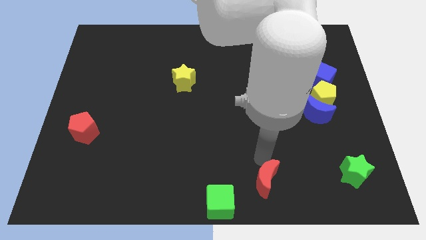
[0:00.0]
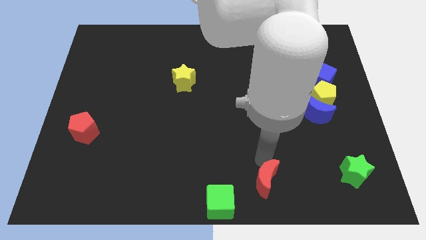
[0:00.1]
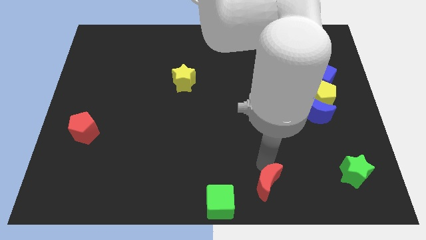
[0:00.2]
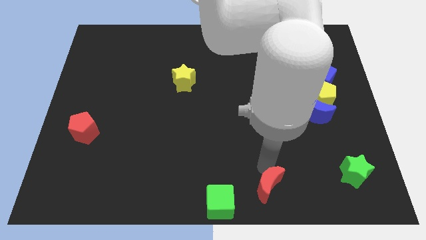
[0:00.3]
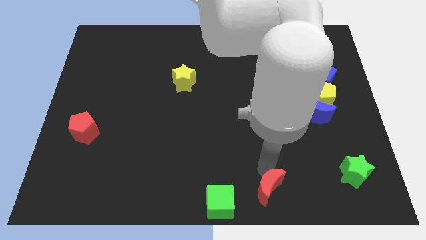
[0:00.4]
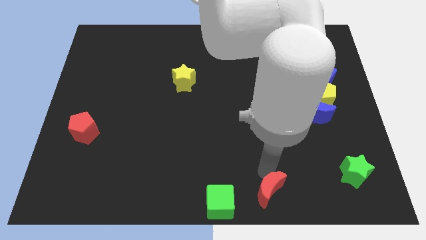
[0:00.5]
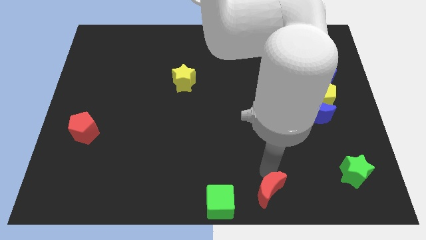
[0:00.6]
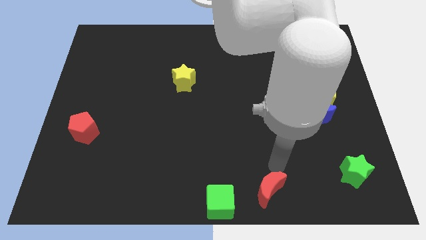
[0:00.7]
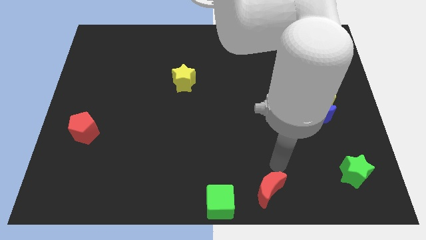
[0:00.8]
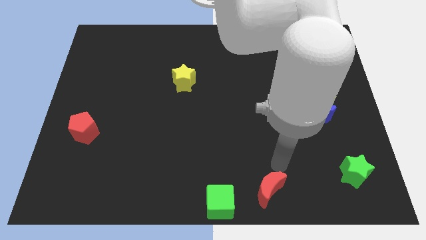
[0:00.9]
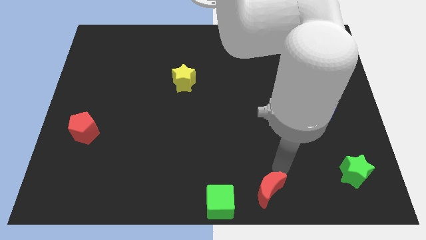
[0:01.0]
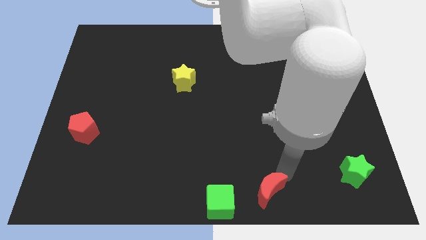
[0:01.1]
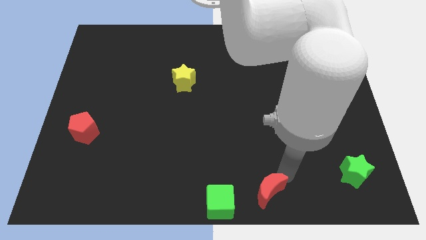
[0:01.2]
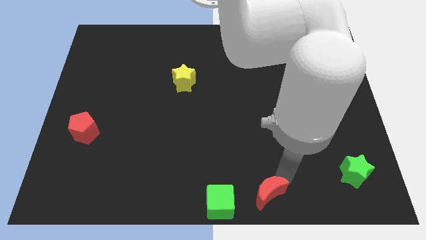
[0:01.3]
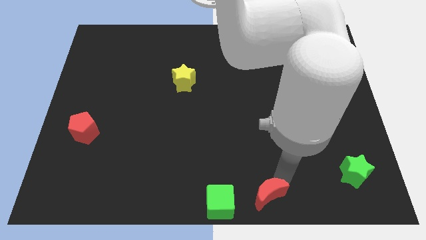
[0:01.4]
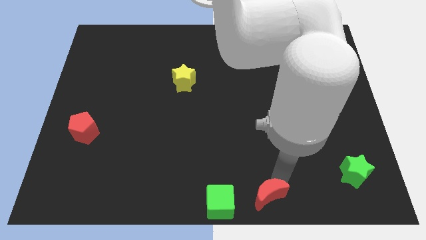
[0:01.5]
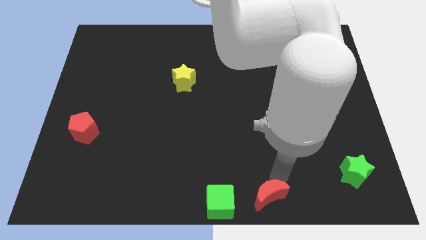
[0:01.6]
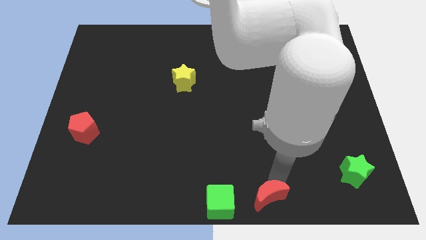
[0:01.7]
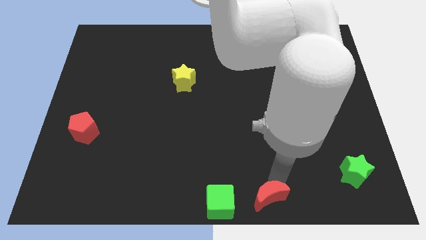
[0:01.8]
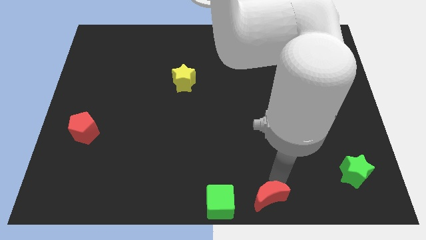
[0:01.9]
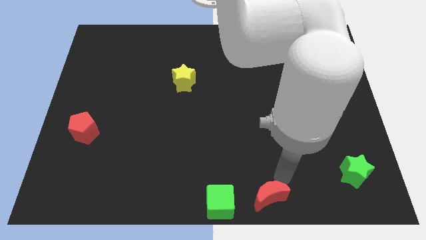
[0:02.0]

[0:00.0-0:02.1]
place the red moon to the right of the green cube

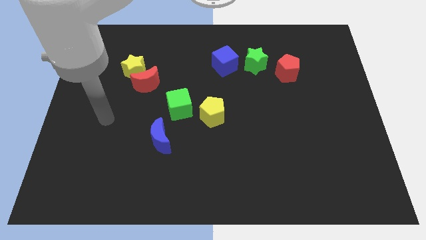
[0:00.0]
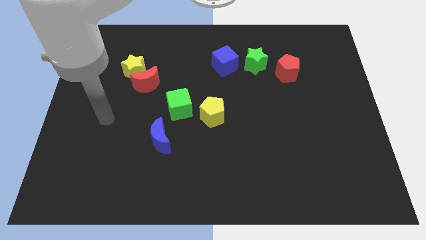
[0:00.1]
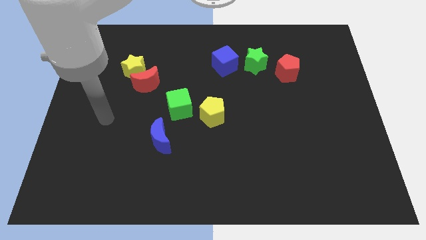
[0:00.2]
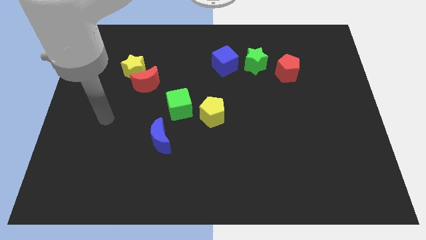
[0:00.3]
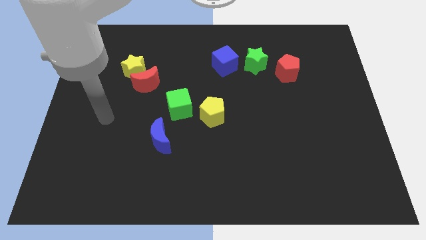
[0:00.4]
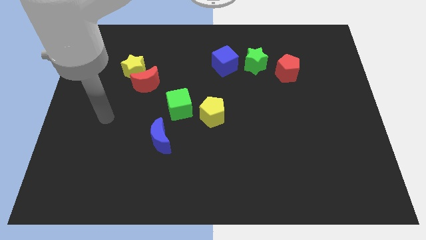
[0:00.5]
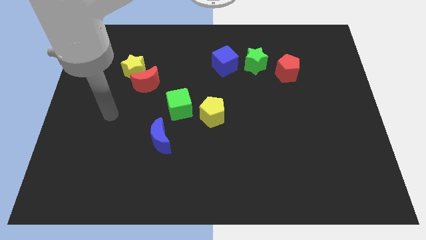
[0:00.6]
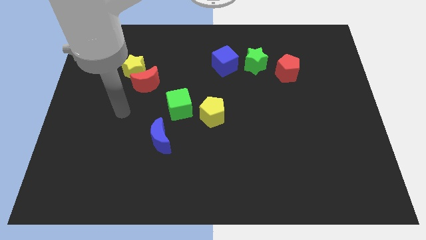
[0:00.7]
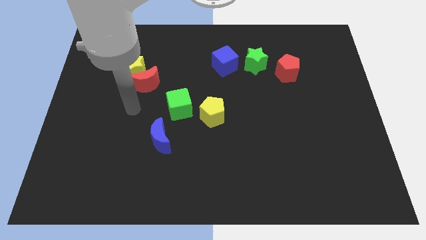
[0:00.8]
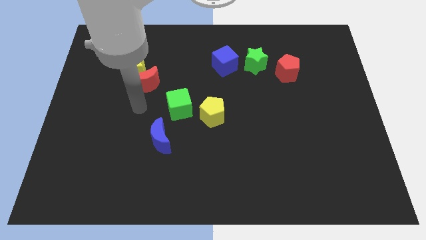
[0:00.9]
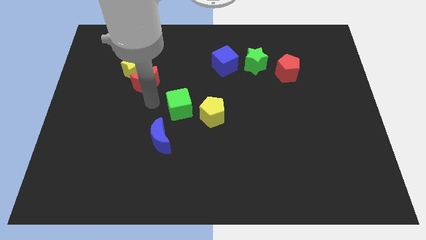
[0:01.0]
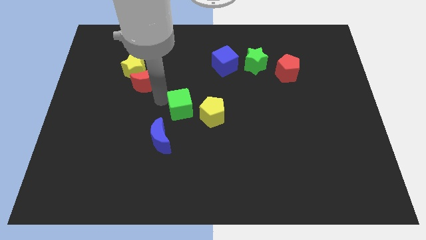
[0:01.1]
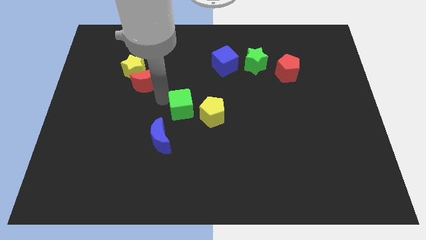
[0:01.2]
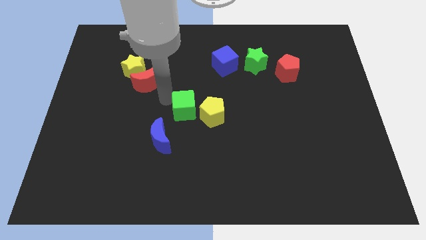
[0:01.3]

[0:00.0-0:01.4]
move the arm to the left side of the green cube

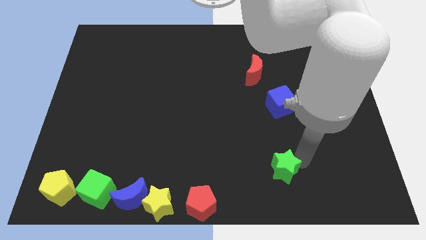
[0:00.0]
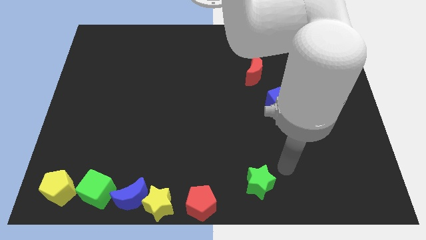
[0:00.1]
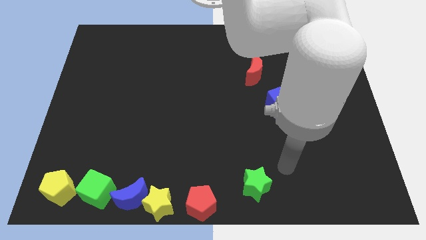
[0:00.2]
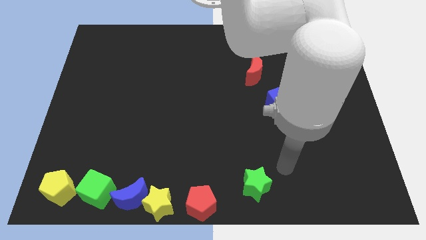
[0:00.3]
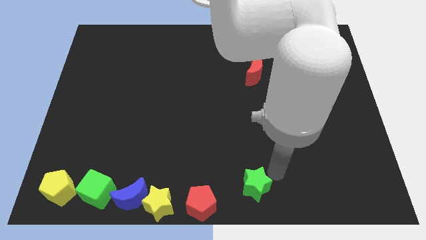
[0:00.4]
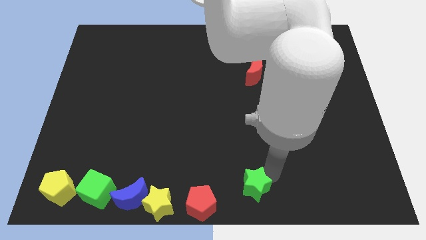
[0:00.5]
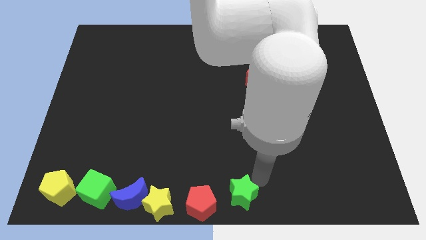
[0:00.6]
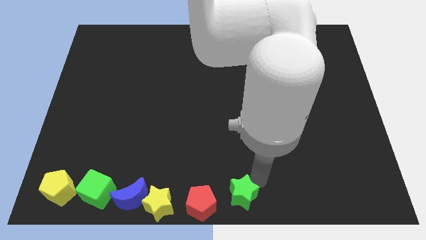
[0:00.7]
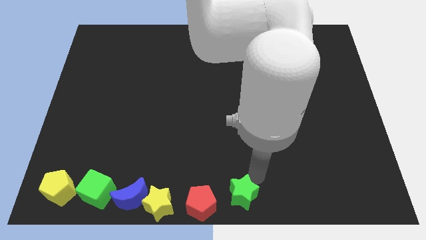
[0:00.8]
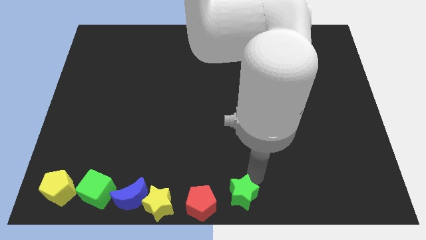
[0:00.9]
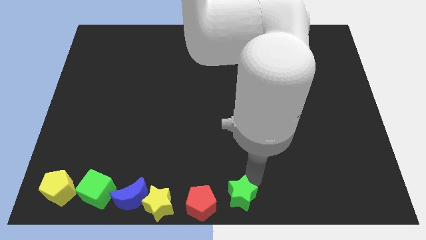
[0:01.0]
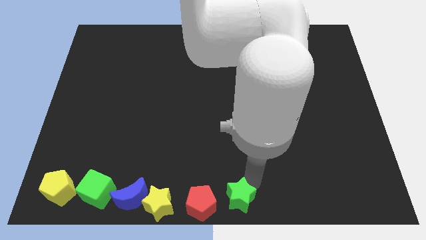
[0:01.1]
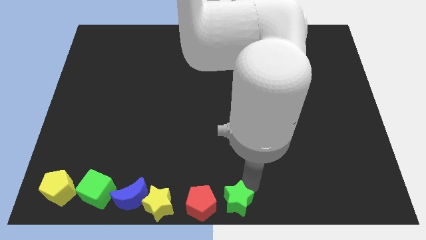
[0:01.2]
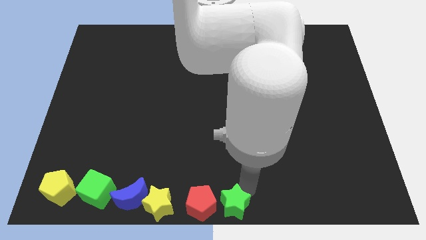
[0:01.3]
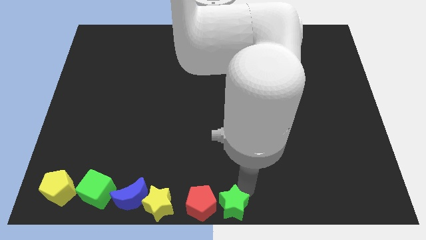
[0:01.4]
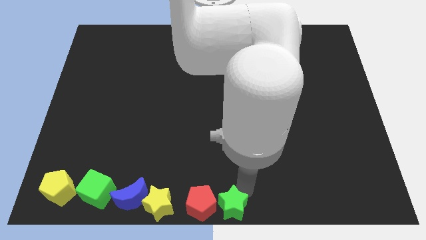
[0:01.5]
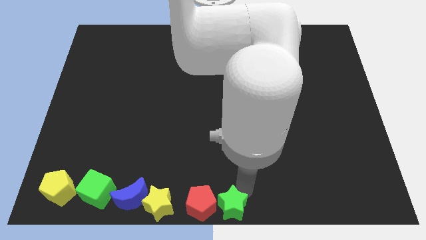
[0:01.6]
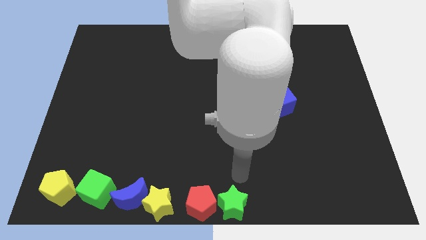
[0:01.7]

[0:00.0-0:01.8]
push the green star into red pentagon

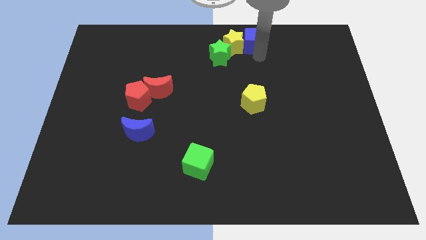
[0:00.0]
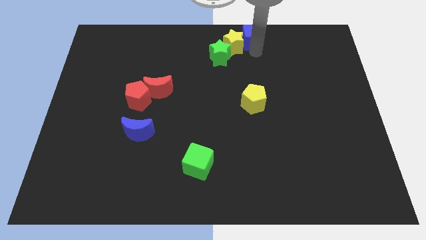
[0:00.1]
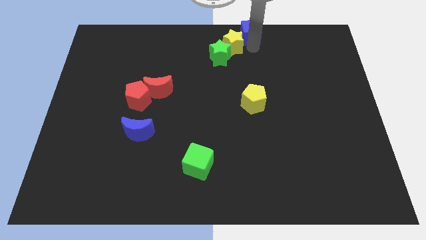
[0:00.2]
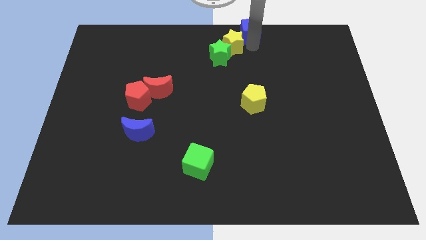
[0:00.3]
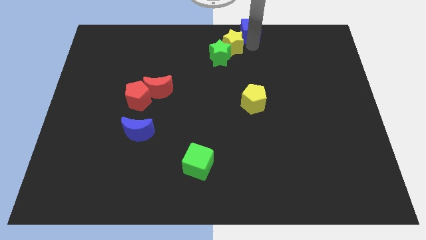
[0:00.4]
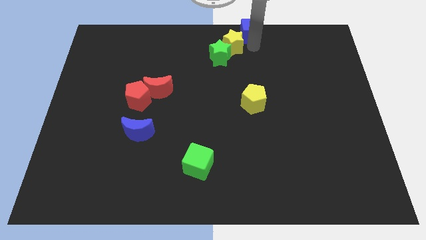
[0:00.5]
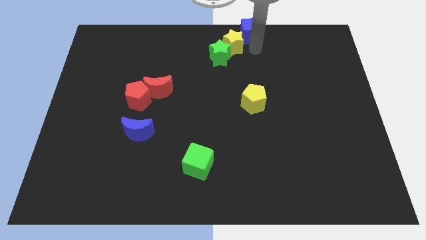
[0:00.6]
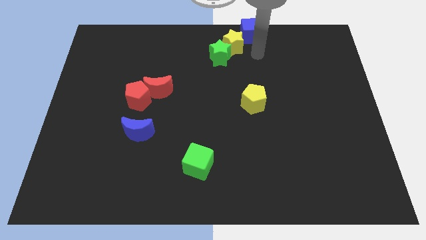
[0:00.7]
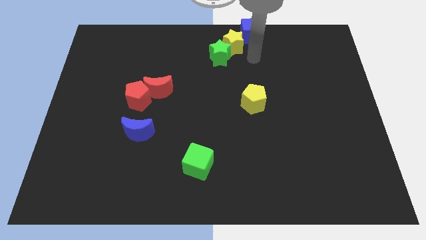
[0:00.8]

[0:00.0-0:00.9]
move blue cube at center top

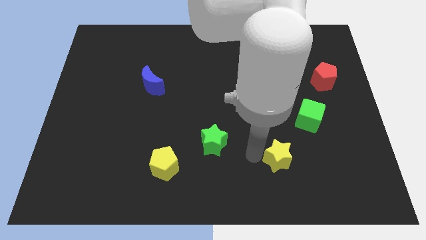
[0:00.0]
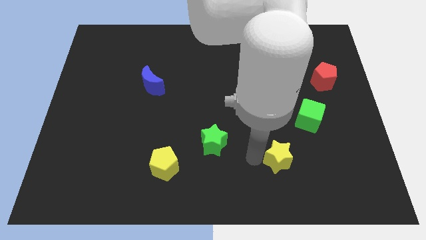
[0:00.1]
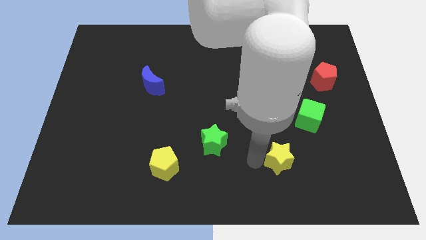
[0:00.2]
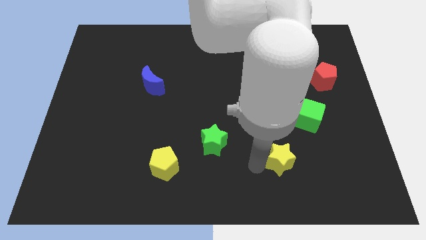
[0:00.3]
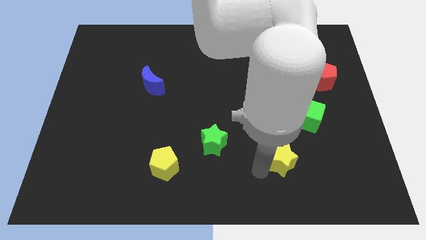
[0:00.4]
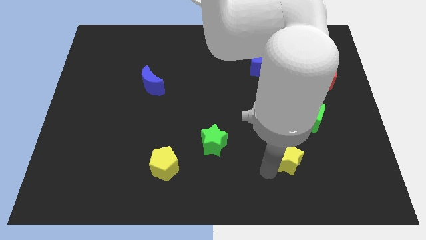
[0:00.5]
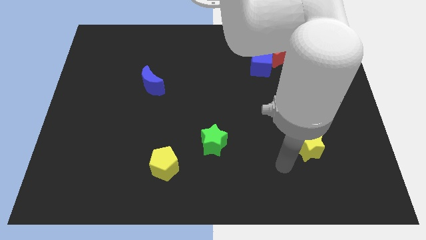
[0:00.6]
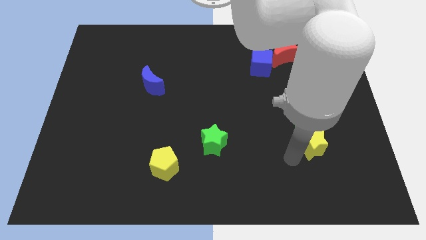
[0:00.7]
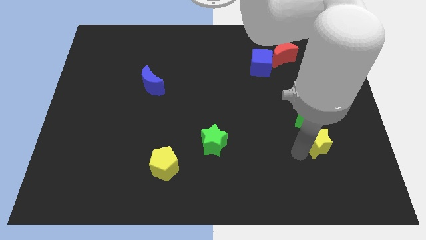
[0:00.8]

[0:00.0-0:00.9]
place the yellow star below the green cube

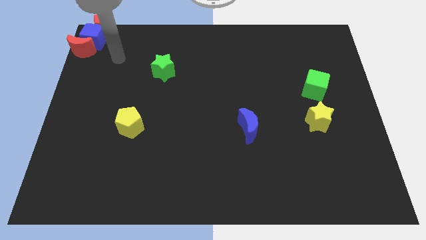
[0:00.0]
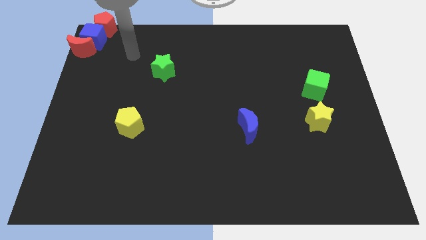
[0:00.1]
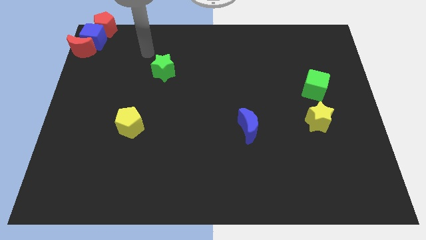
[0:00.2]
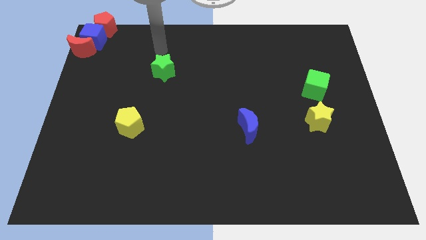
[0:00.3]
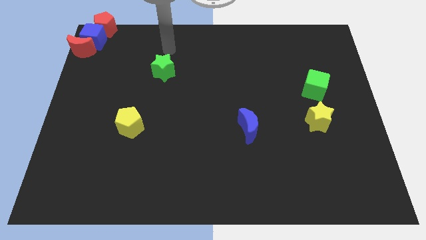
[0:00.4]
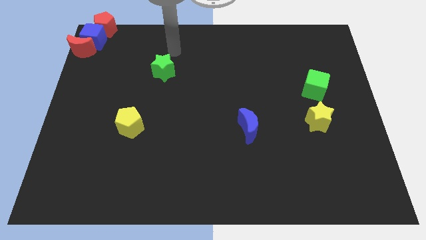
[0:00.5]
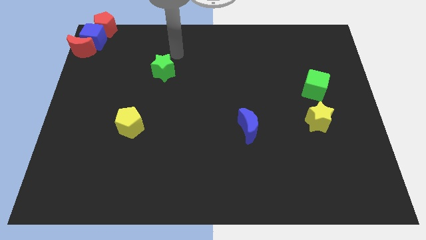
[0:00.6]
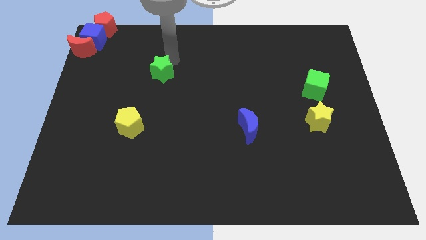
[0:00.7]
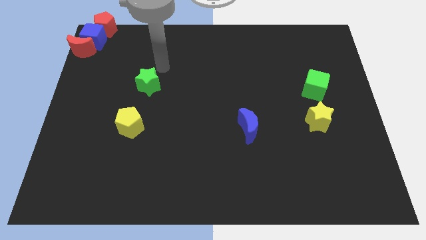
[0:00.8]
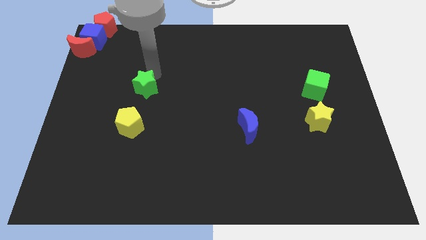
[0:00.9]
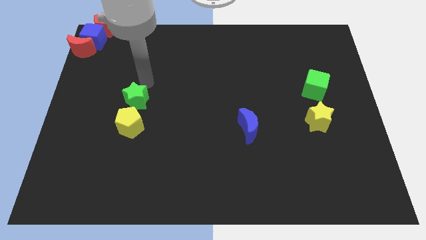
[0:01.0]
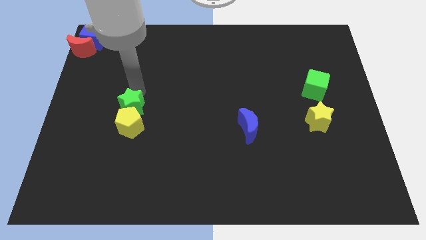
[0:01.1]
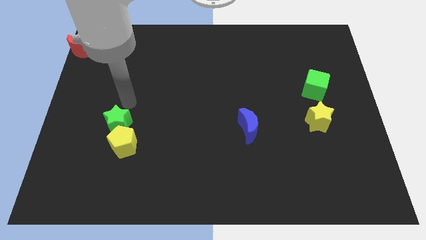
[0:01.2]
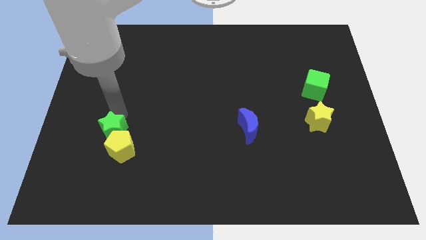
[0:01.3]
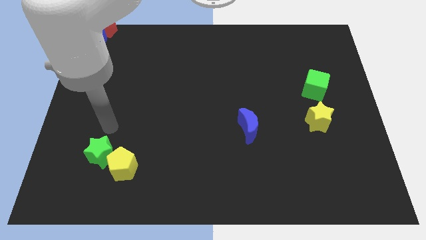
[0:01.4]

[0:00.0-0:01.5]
push the yellow pentagon and the green star towards the bottom left

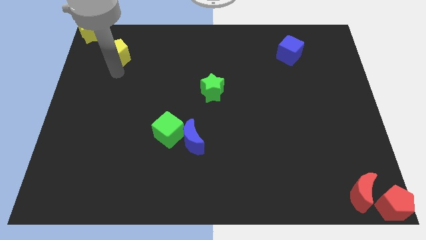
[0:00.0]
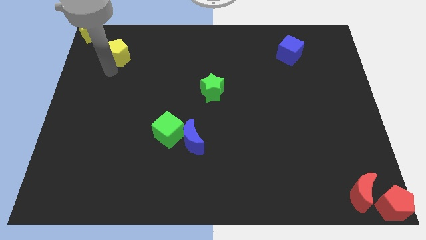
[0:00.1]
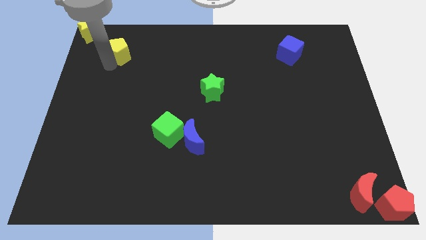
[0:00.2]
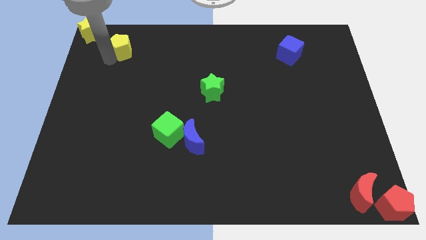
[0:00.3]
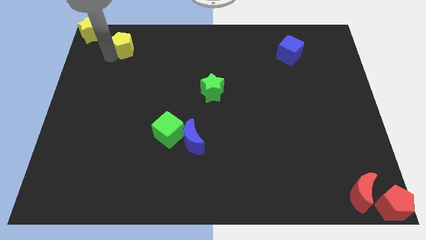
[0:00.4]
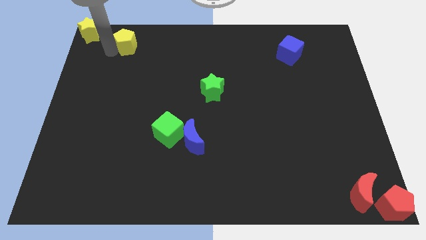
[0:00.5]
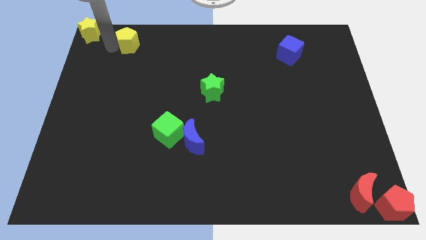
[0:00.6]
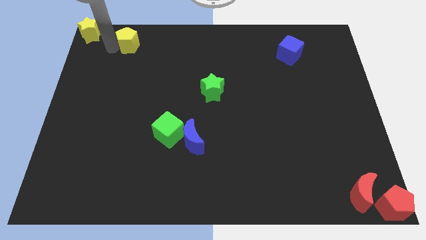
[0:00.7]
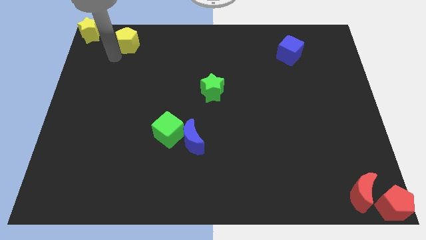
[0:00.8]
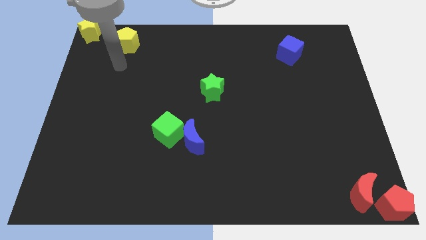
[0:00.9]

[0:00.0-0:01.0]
place the yellow pentagon diagonally to the yellow star
